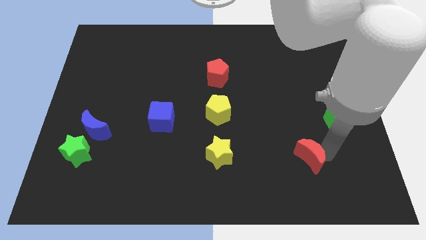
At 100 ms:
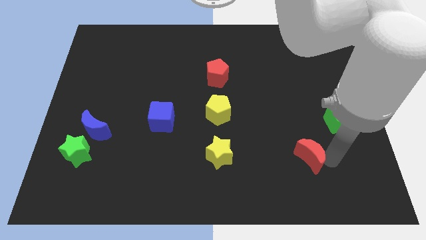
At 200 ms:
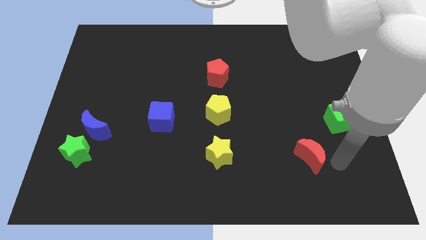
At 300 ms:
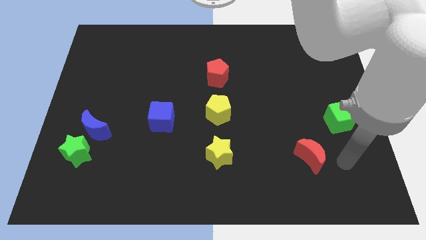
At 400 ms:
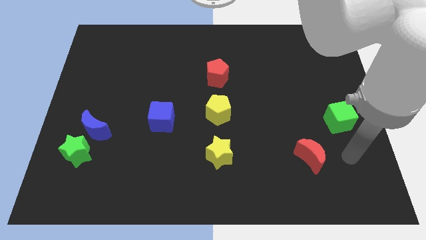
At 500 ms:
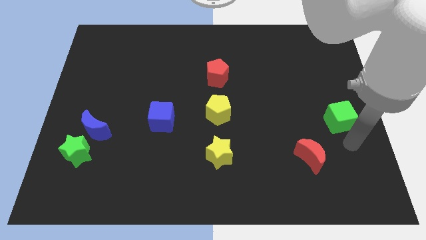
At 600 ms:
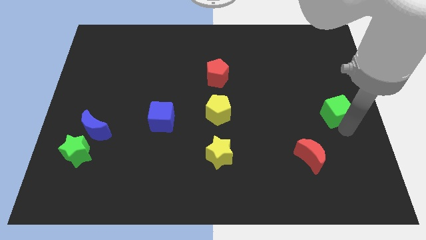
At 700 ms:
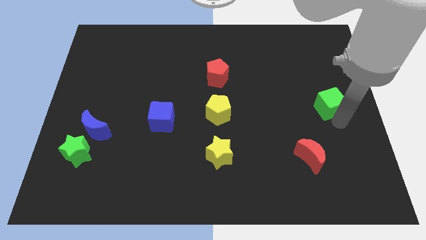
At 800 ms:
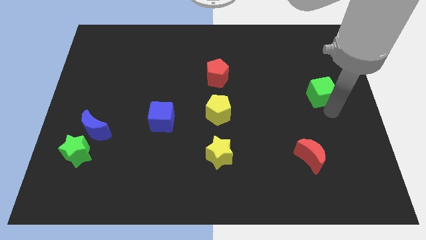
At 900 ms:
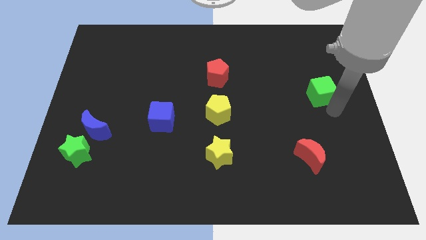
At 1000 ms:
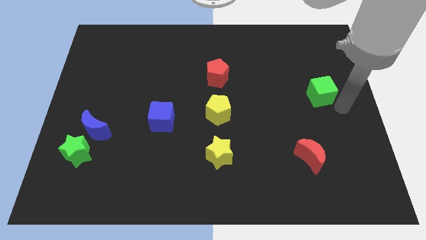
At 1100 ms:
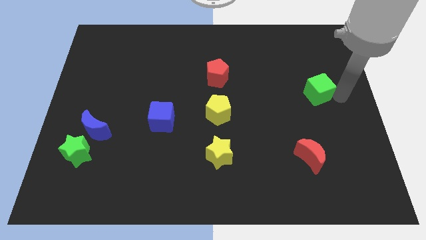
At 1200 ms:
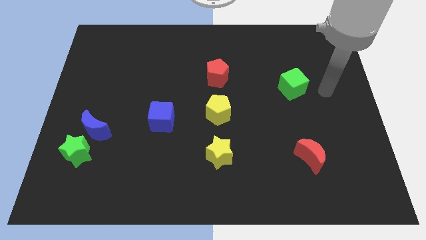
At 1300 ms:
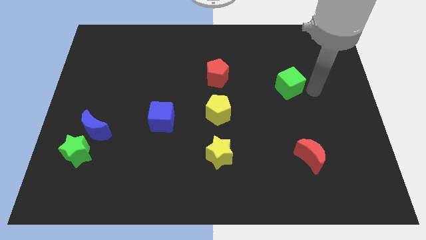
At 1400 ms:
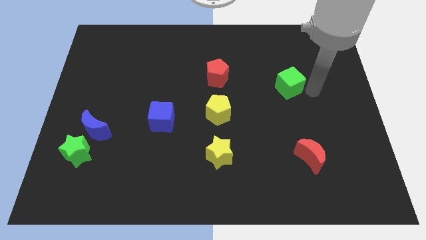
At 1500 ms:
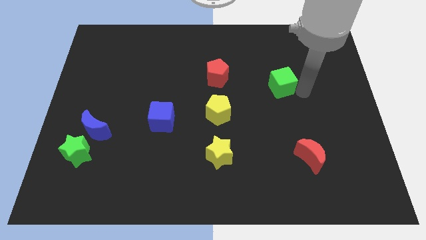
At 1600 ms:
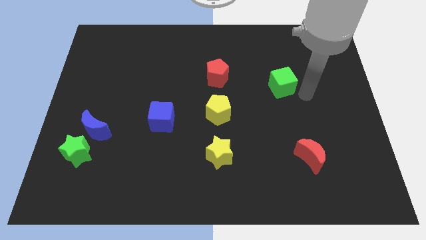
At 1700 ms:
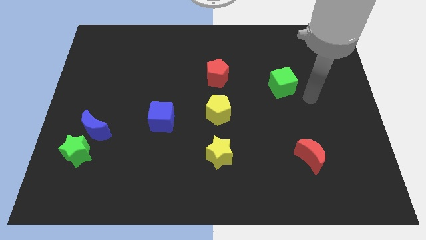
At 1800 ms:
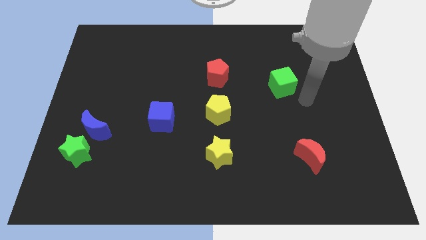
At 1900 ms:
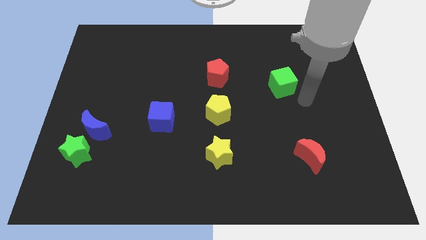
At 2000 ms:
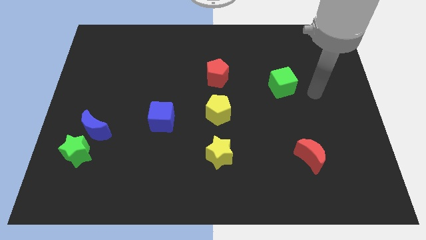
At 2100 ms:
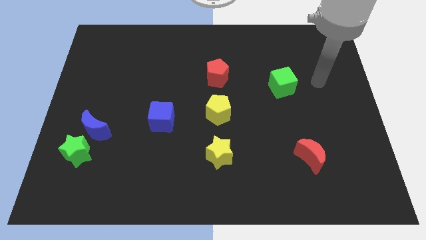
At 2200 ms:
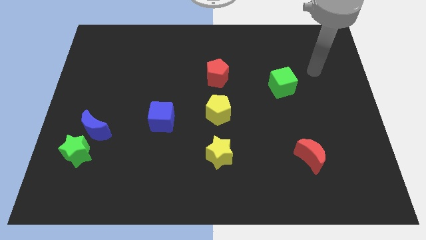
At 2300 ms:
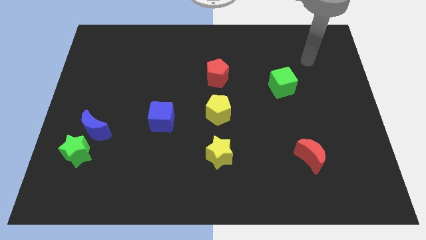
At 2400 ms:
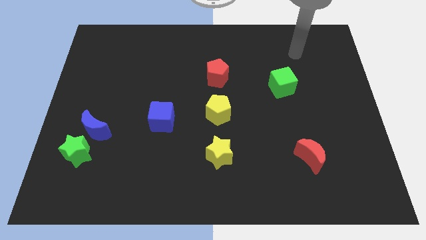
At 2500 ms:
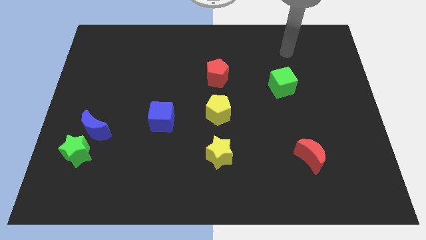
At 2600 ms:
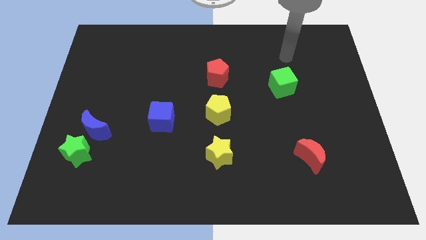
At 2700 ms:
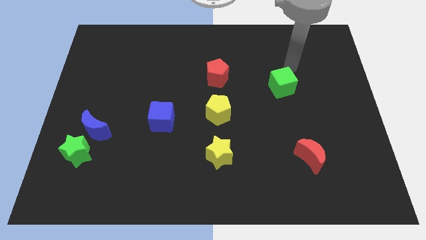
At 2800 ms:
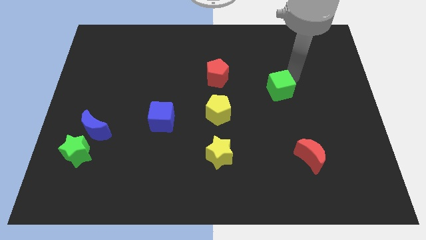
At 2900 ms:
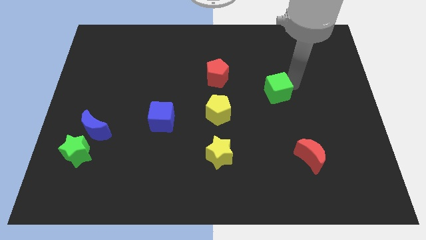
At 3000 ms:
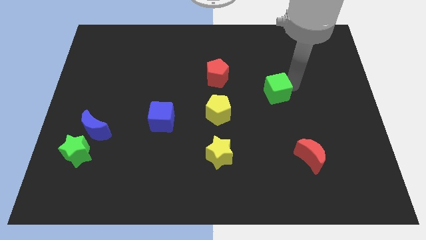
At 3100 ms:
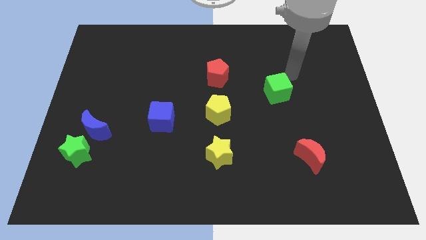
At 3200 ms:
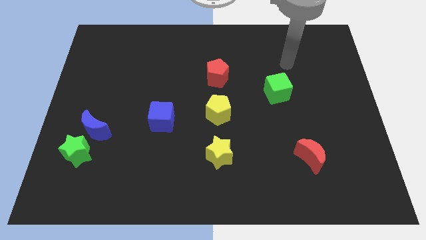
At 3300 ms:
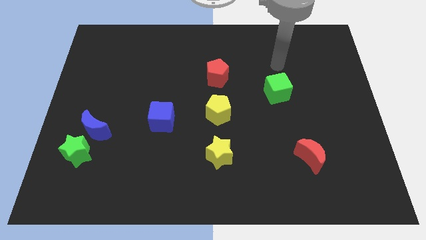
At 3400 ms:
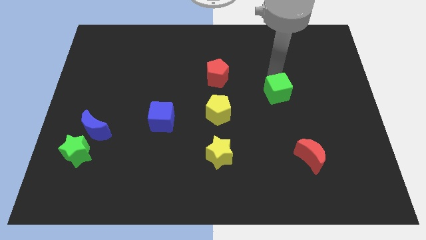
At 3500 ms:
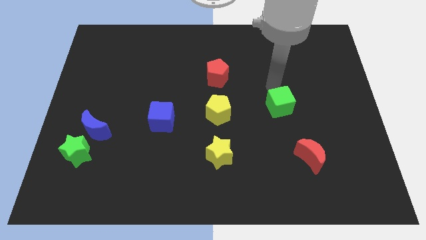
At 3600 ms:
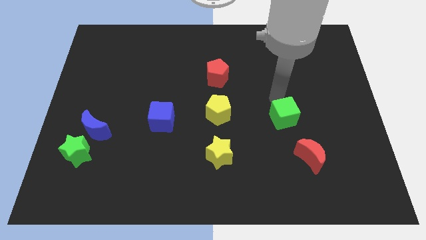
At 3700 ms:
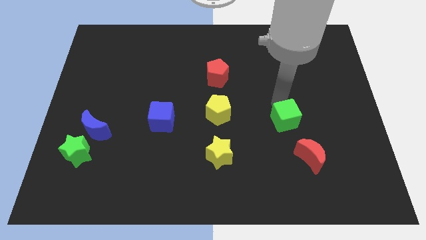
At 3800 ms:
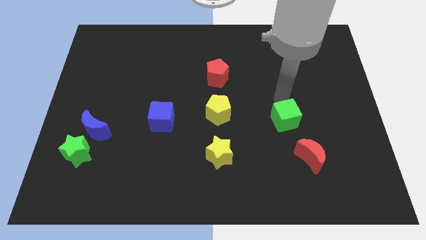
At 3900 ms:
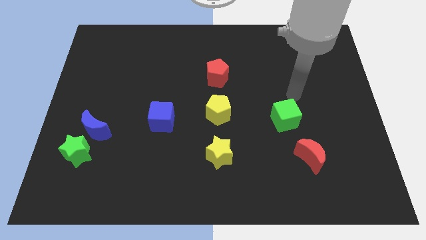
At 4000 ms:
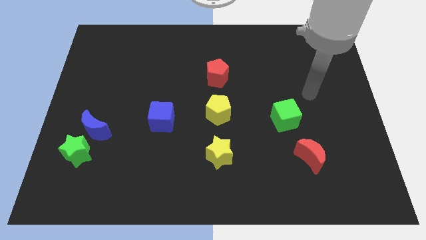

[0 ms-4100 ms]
move green cube diagonal to red moon

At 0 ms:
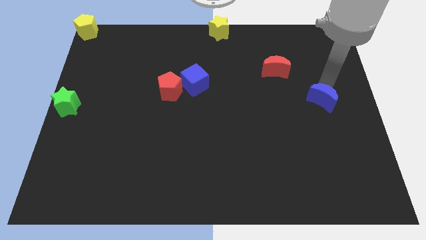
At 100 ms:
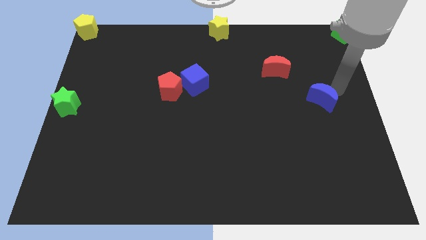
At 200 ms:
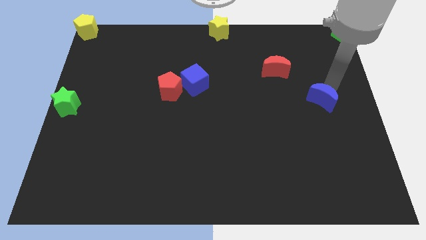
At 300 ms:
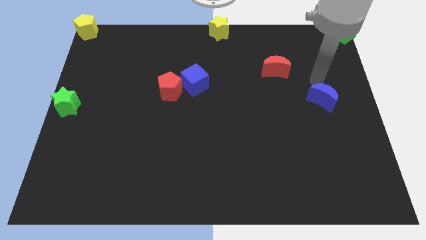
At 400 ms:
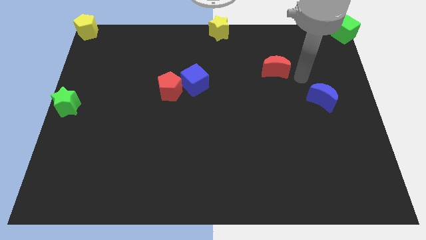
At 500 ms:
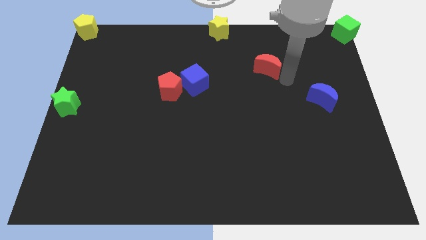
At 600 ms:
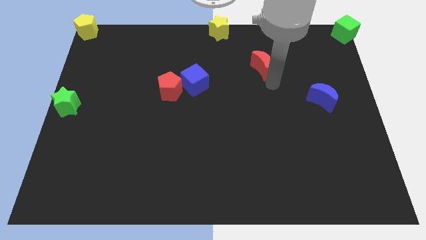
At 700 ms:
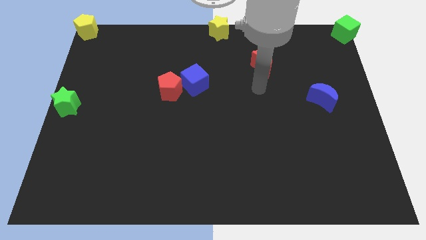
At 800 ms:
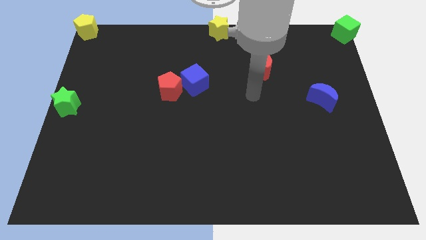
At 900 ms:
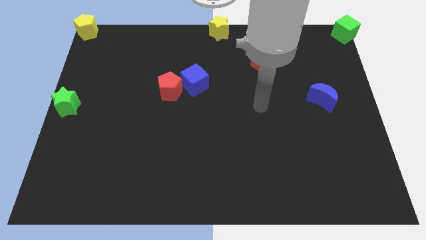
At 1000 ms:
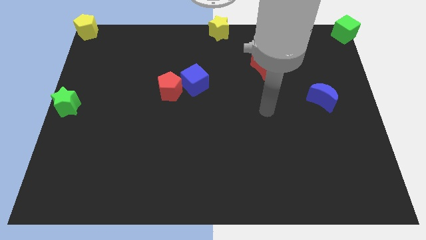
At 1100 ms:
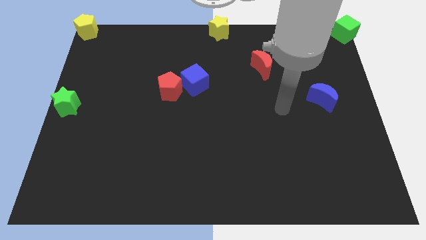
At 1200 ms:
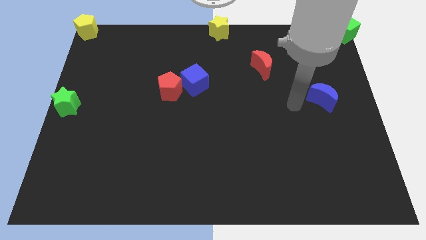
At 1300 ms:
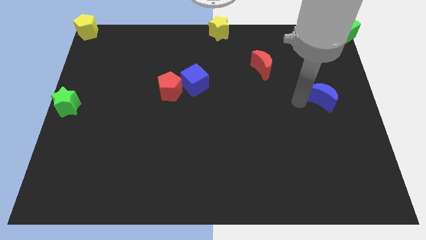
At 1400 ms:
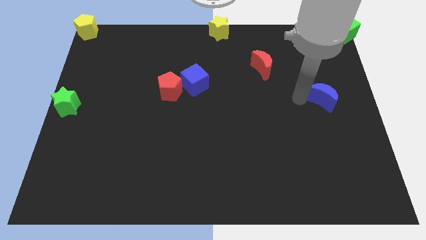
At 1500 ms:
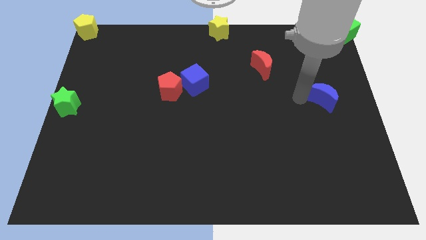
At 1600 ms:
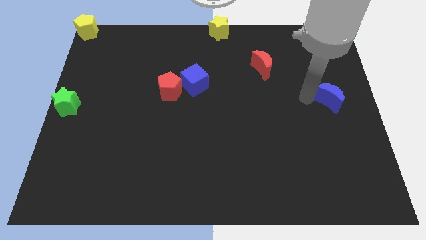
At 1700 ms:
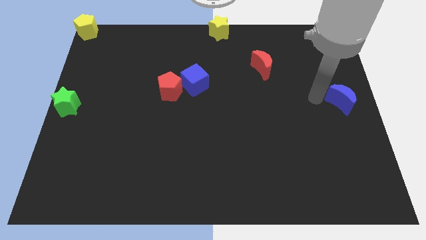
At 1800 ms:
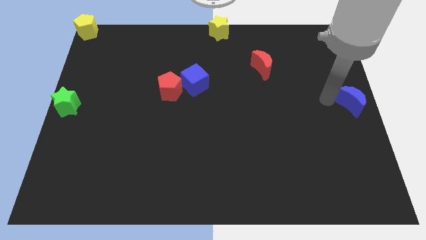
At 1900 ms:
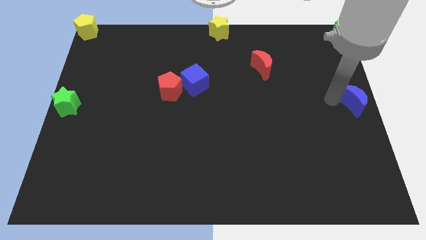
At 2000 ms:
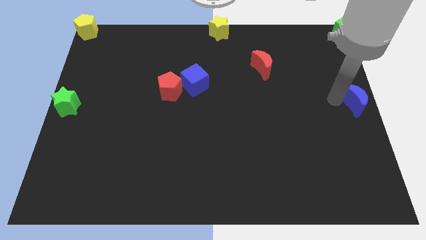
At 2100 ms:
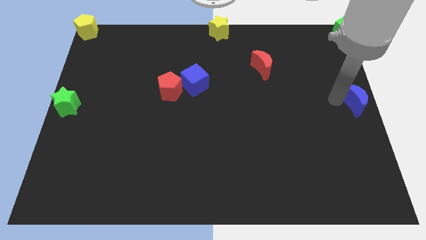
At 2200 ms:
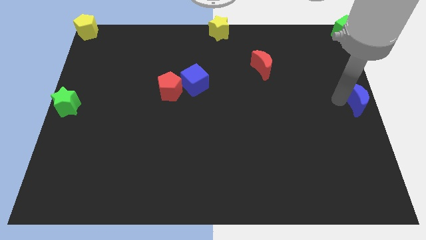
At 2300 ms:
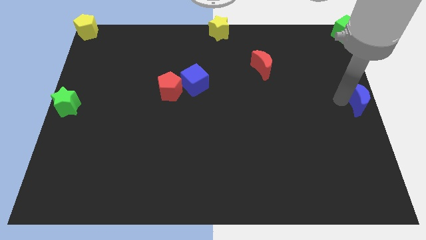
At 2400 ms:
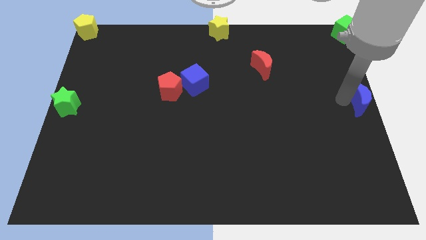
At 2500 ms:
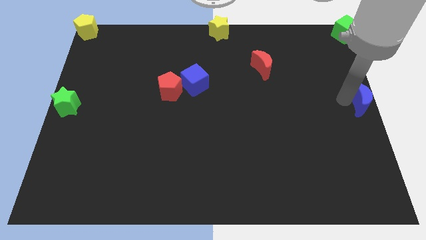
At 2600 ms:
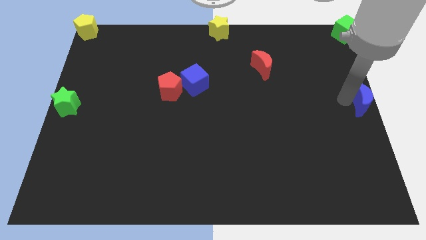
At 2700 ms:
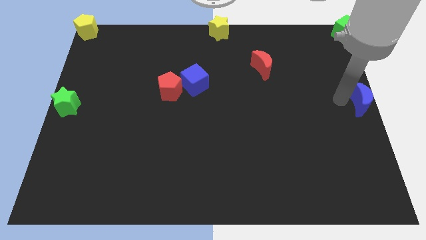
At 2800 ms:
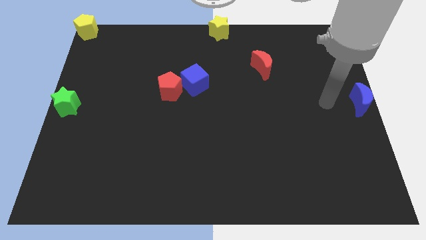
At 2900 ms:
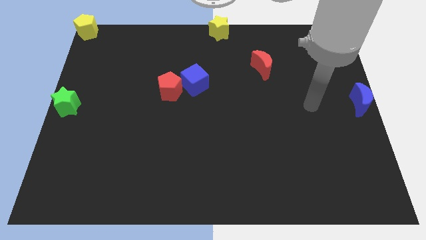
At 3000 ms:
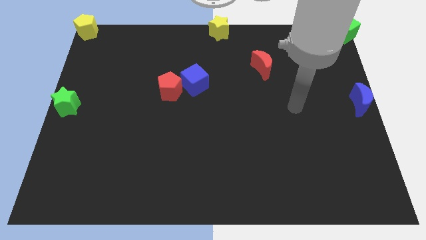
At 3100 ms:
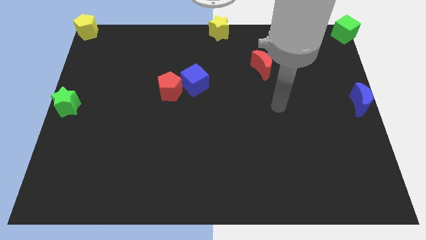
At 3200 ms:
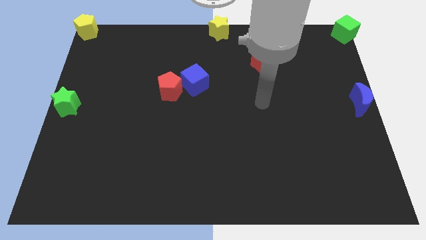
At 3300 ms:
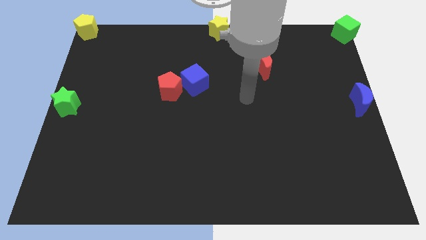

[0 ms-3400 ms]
move the blue crescent to the right centre of the board

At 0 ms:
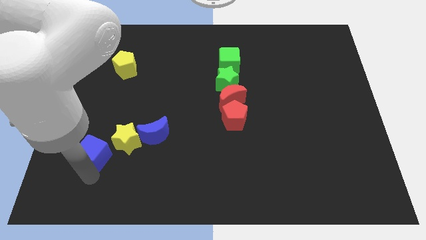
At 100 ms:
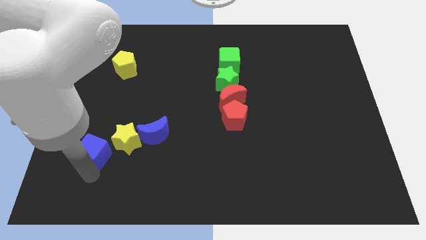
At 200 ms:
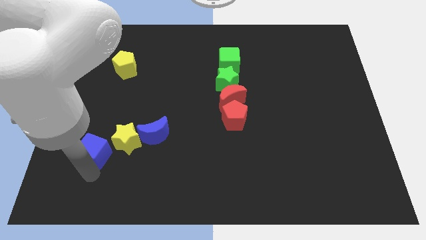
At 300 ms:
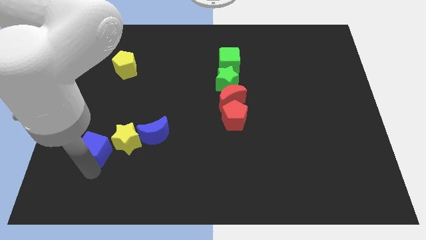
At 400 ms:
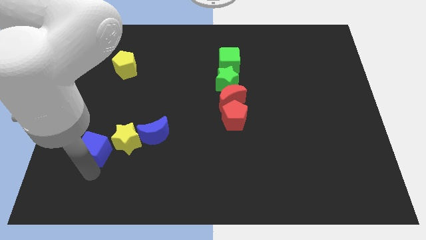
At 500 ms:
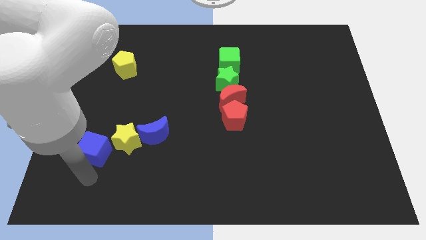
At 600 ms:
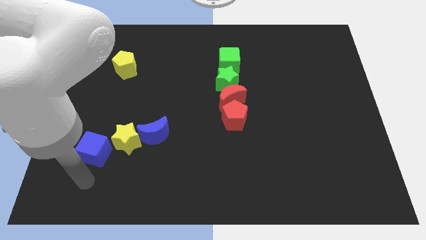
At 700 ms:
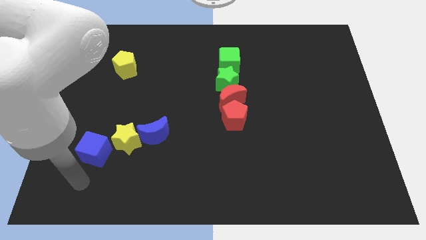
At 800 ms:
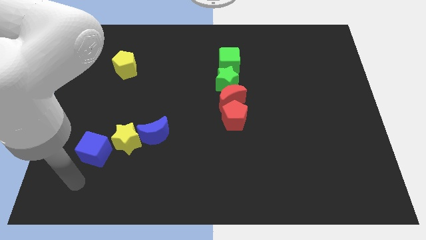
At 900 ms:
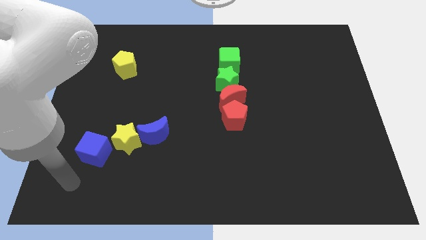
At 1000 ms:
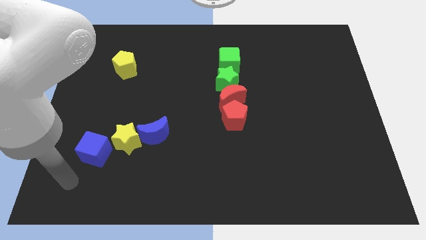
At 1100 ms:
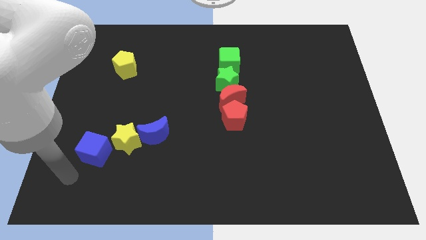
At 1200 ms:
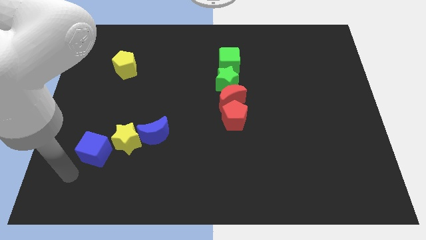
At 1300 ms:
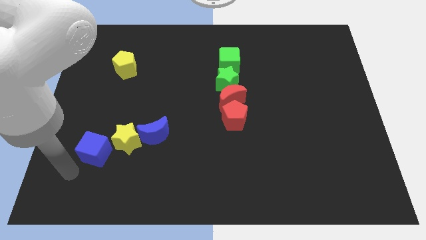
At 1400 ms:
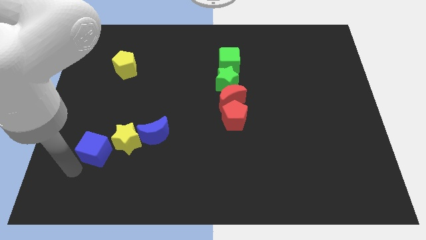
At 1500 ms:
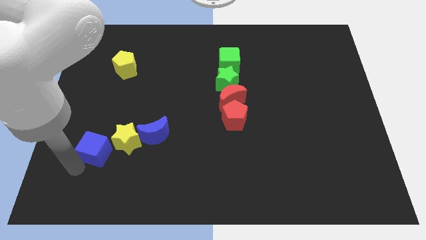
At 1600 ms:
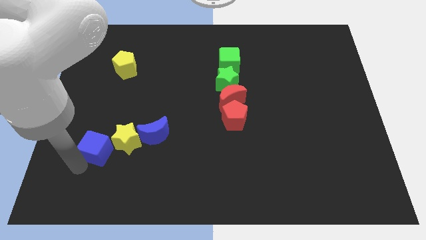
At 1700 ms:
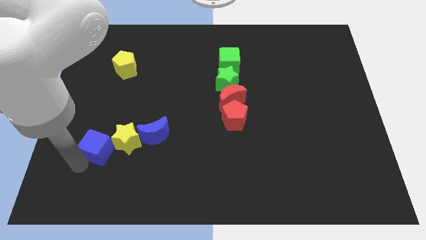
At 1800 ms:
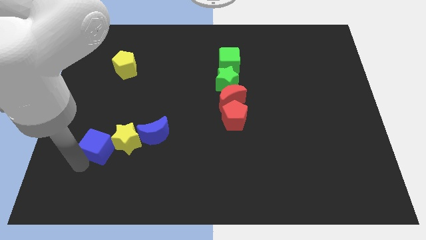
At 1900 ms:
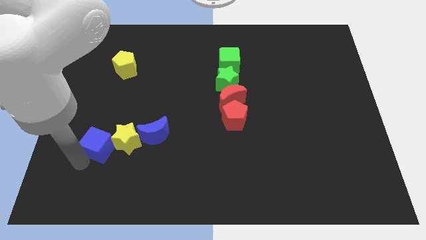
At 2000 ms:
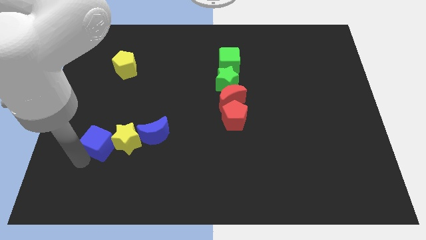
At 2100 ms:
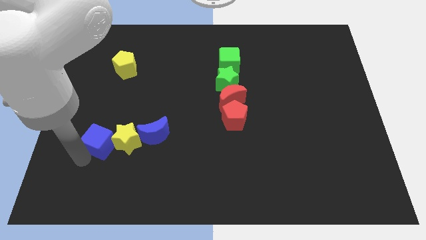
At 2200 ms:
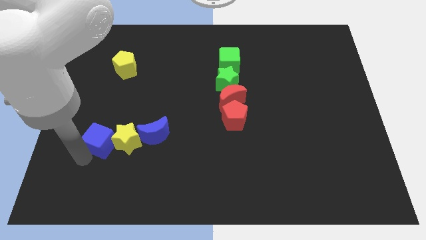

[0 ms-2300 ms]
move the blue cube to the left side of the yellow star
